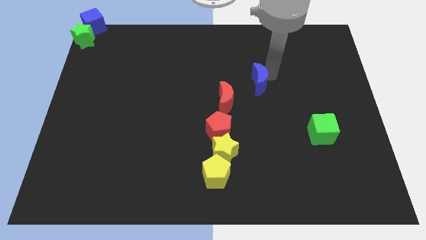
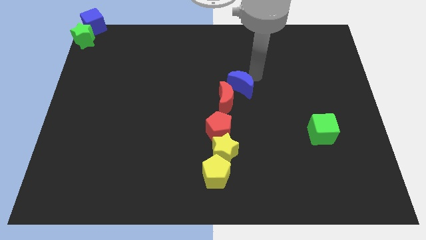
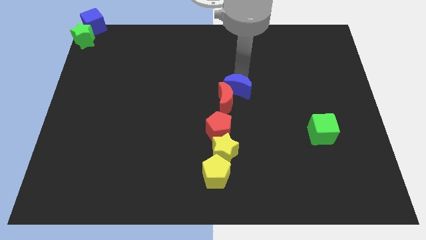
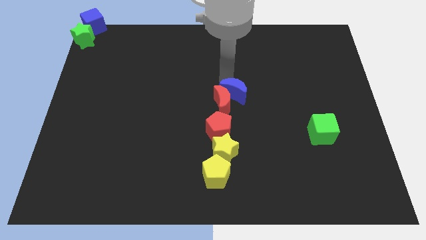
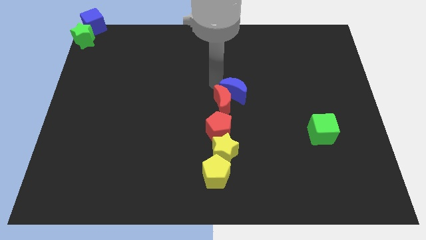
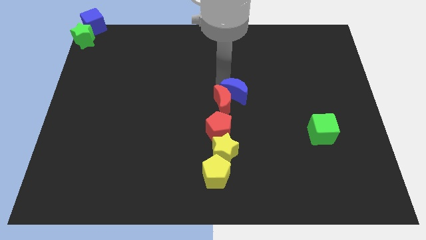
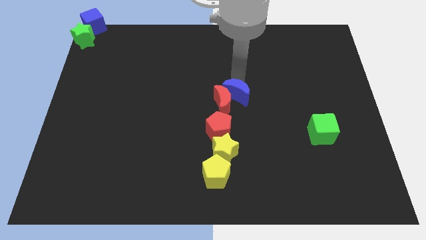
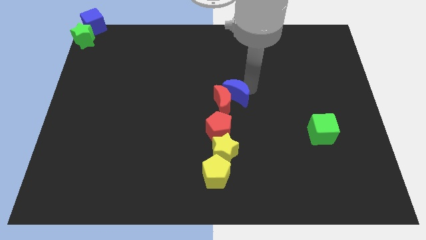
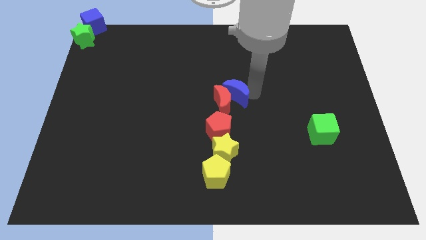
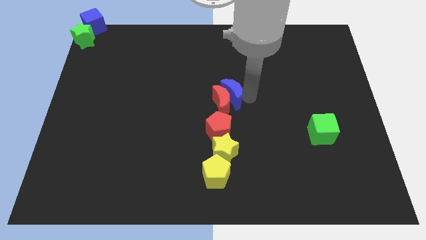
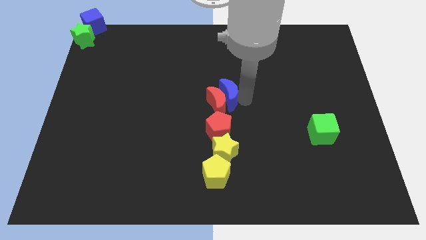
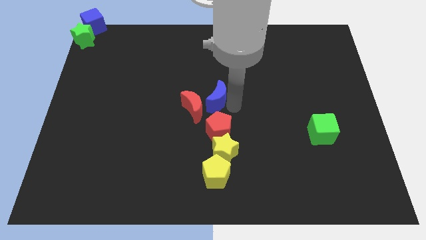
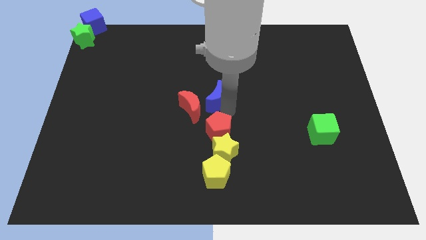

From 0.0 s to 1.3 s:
move blue crescent above red pentagon

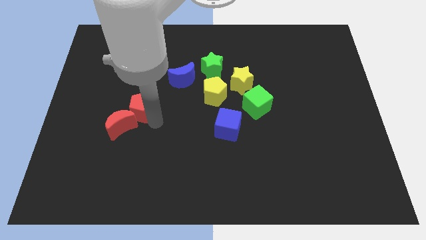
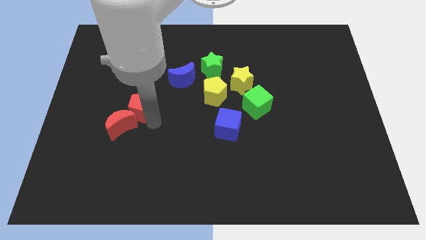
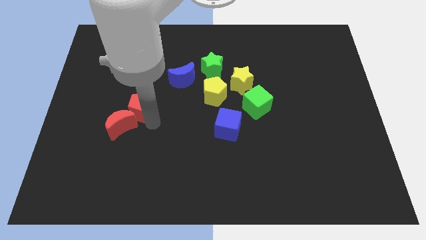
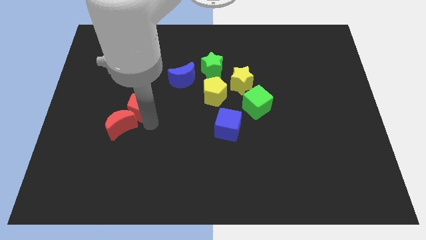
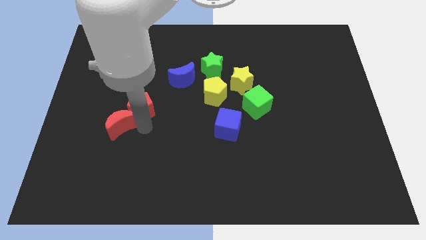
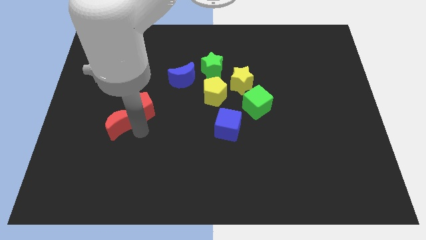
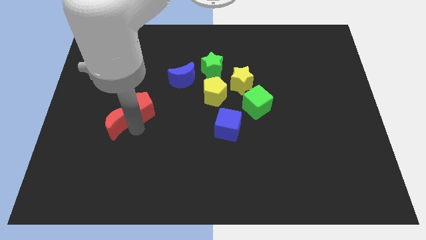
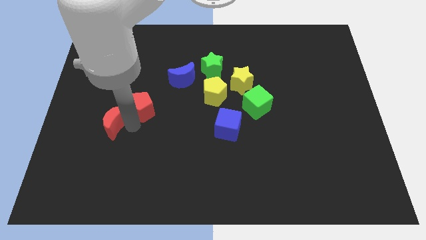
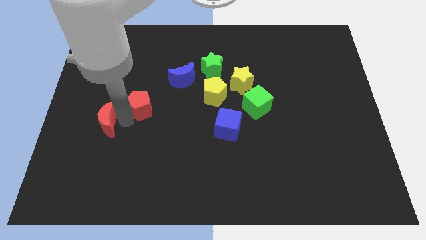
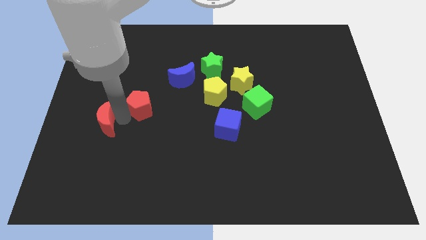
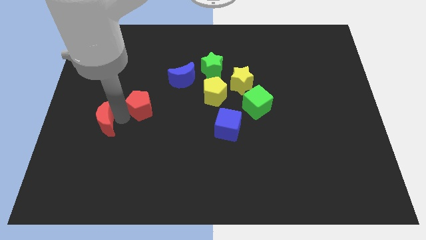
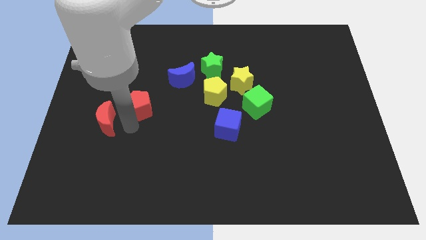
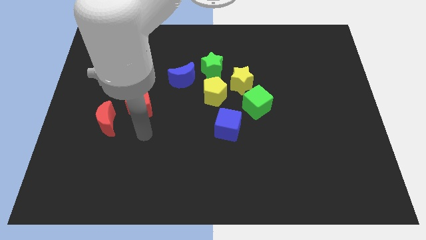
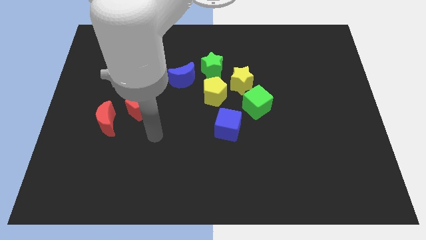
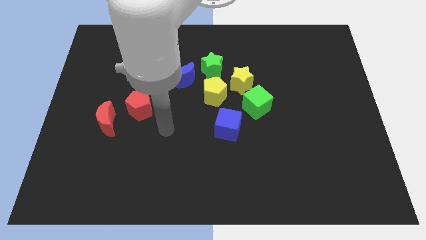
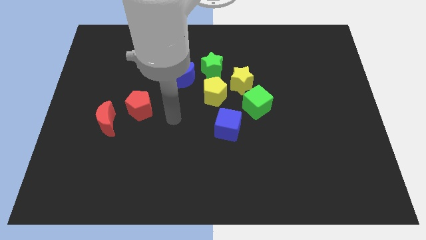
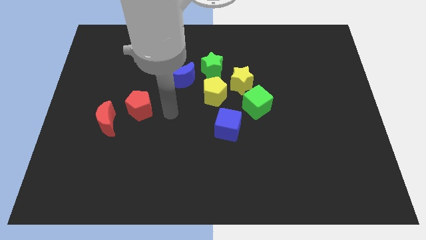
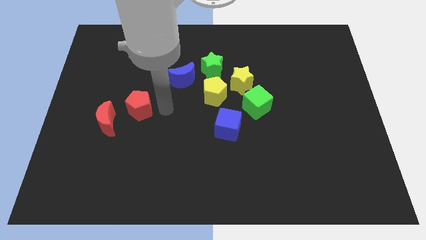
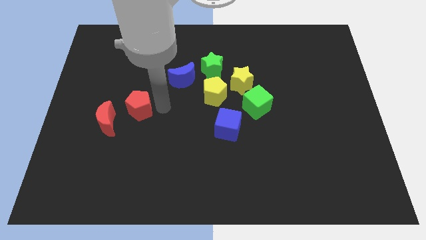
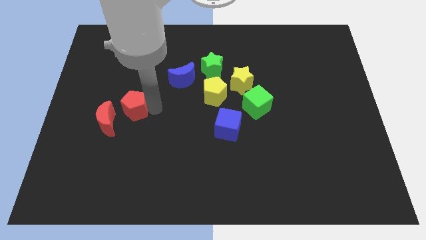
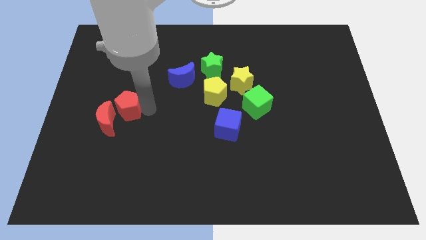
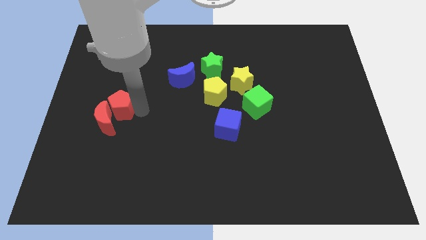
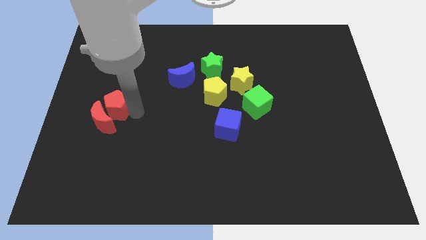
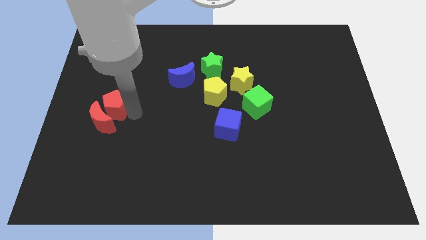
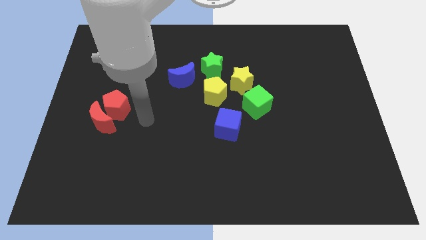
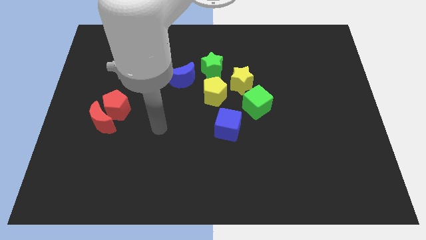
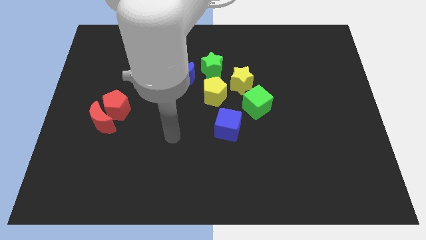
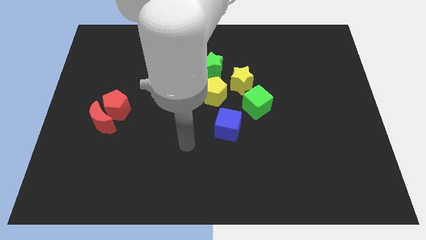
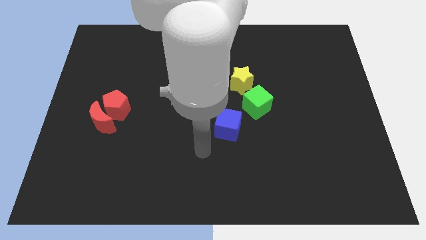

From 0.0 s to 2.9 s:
move the red blocks to the middle left of the board

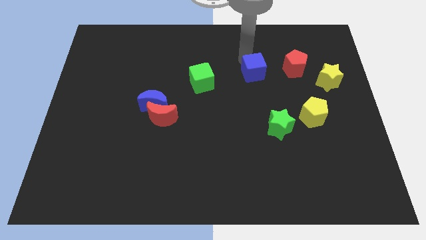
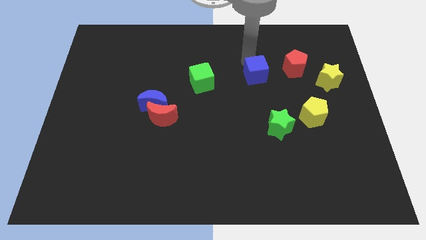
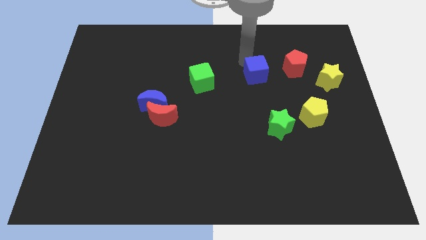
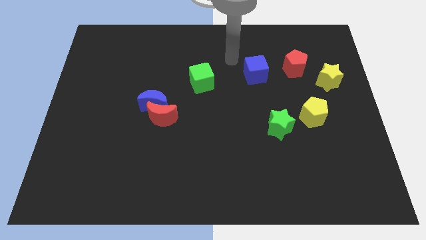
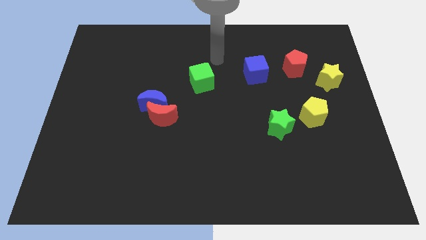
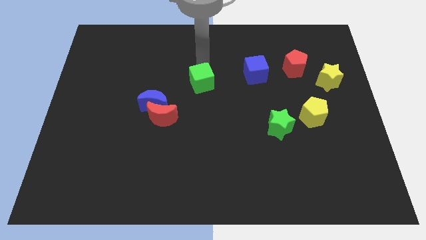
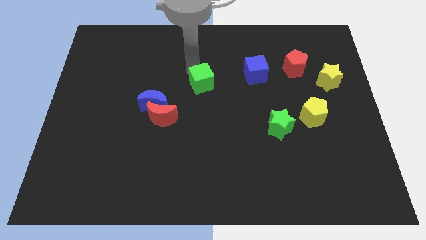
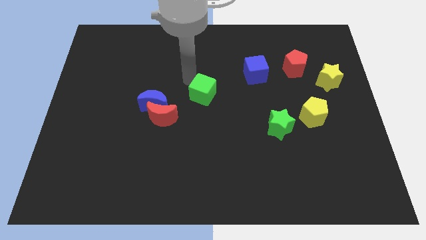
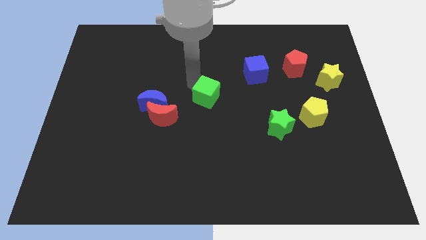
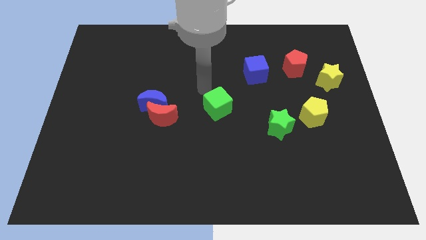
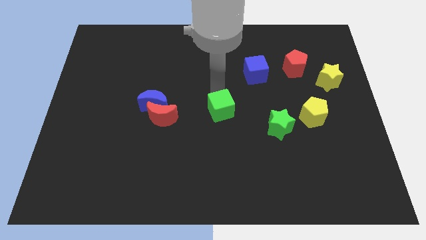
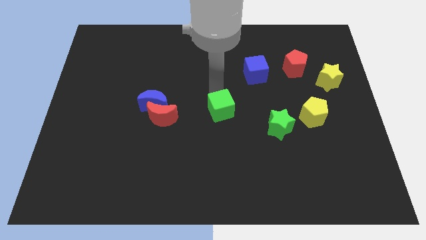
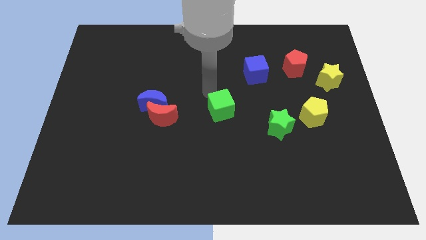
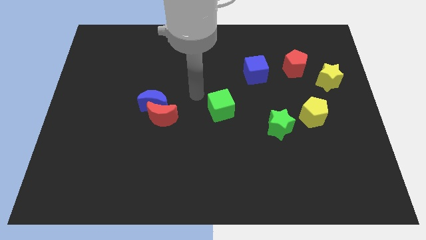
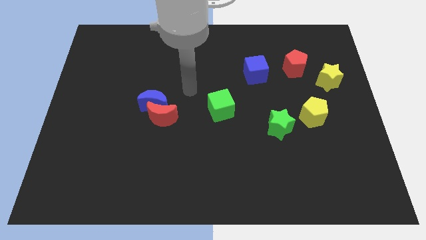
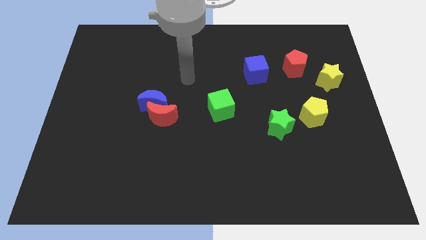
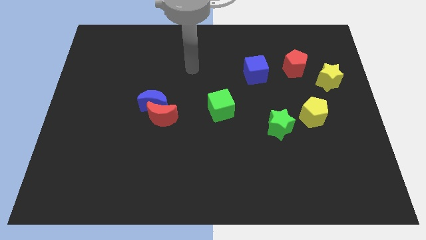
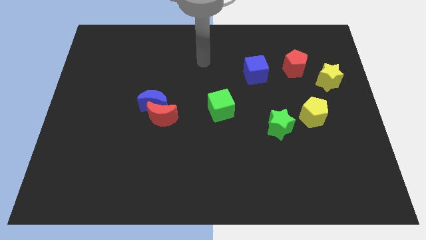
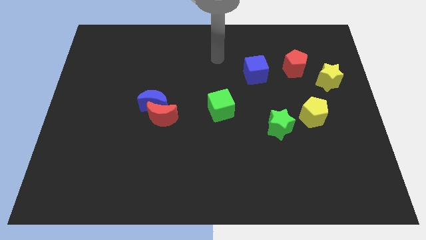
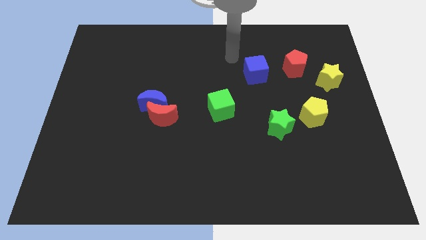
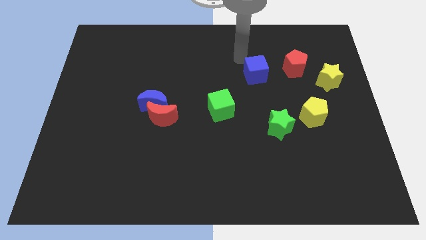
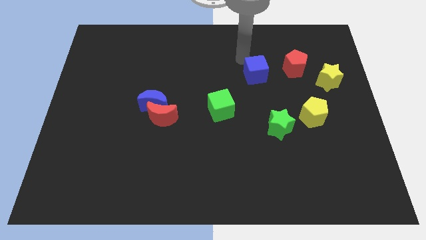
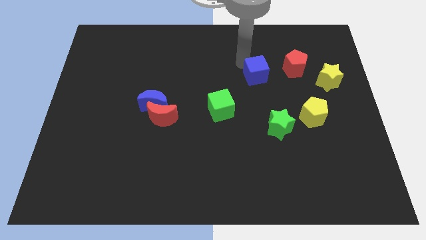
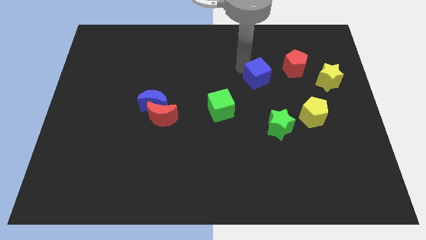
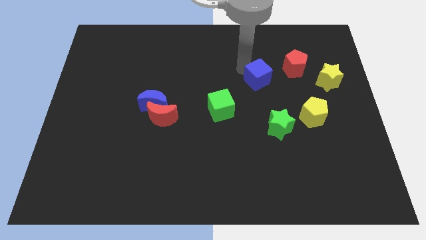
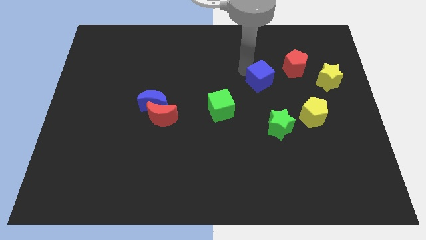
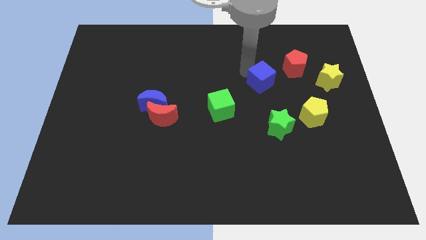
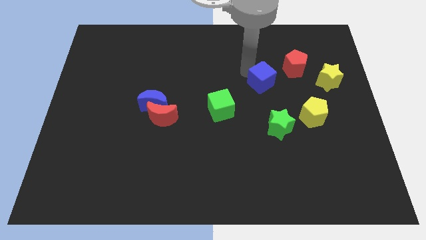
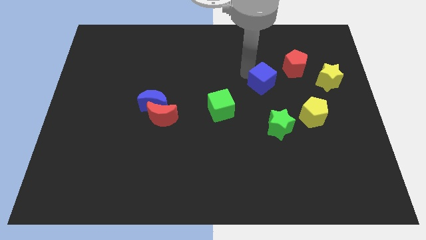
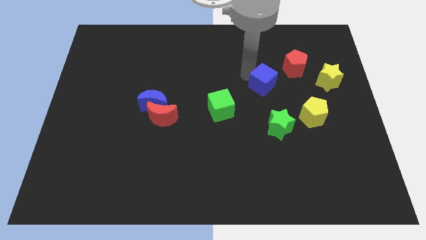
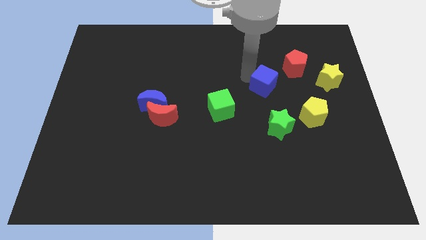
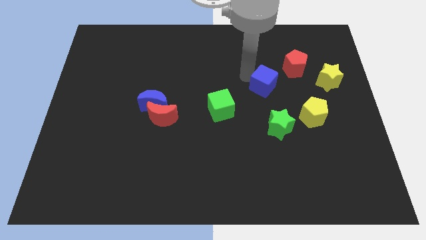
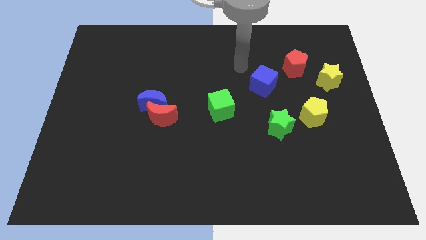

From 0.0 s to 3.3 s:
place the green cube diagonally to the green cube

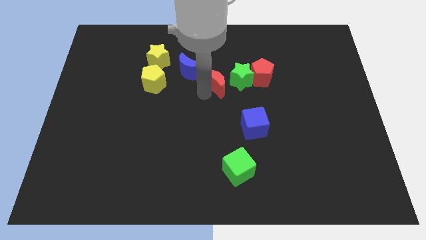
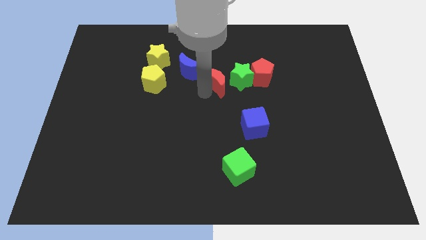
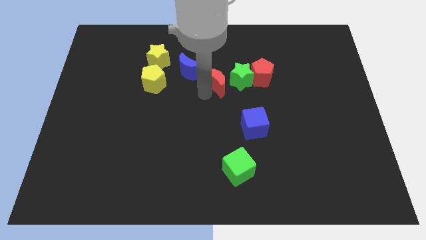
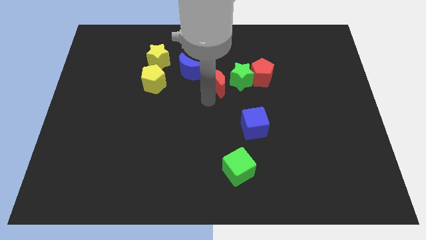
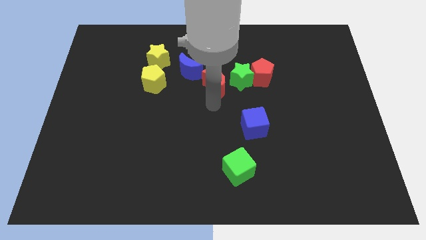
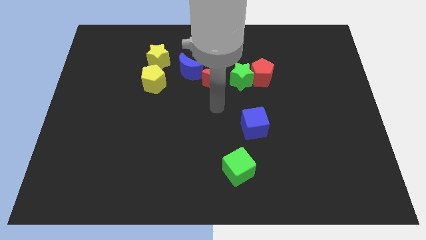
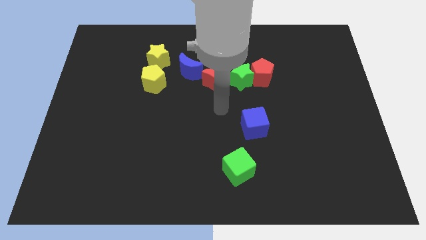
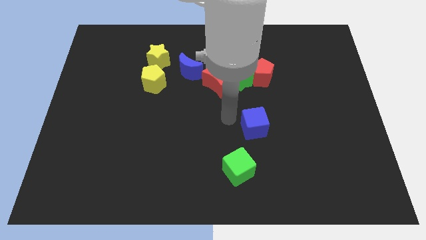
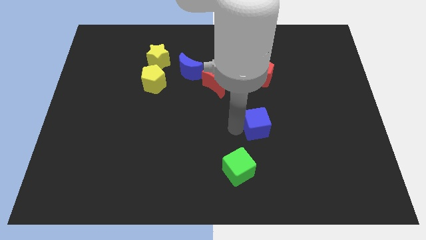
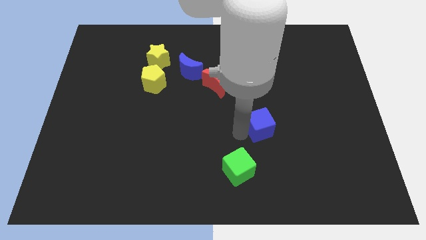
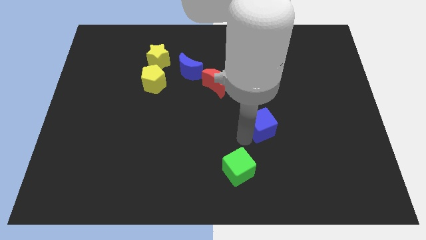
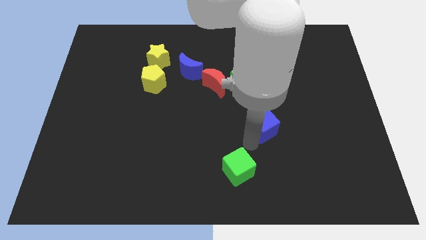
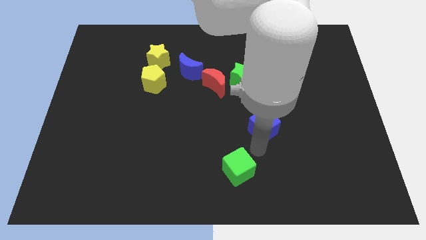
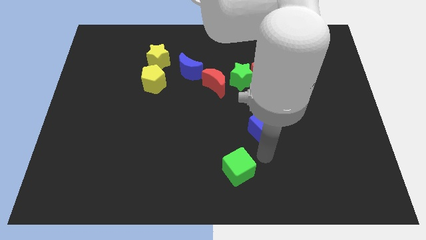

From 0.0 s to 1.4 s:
slightly move the blue crescent to the right
